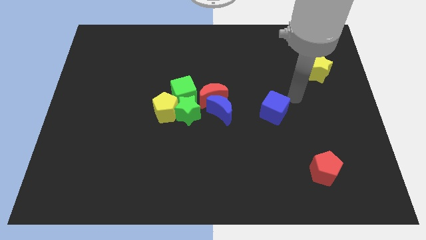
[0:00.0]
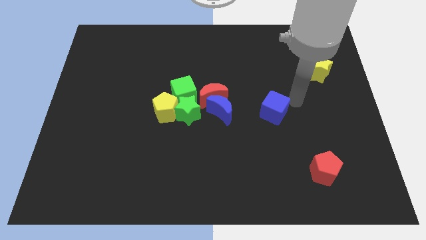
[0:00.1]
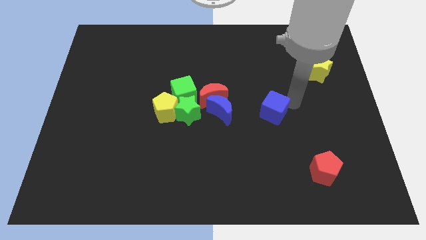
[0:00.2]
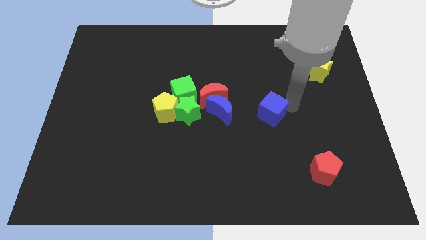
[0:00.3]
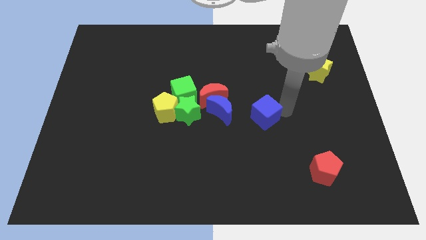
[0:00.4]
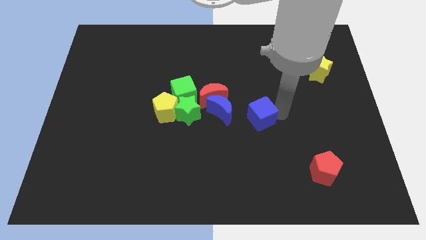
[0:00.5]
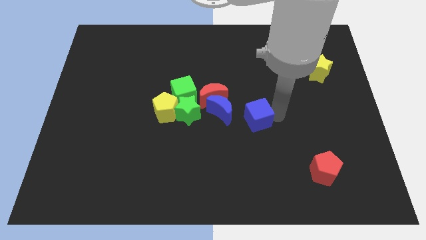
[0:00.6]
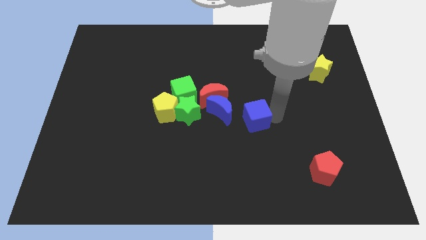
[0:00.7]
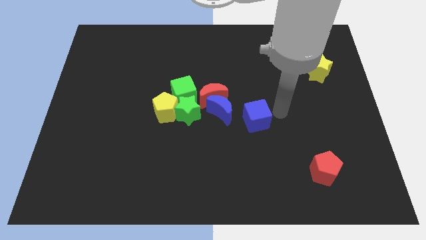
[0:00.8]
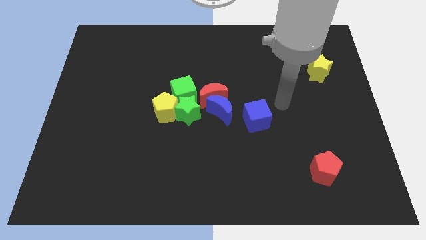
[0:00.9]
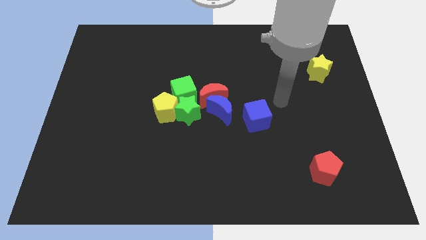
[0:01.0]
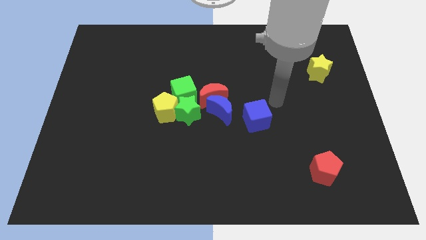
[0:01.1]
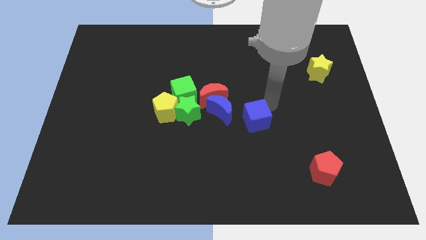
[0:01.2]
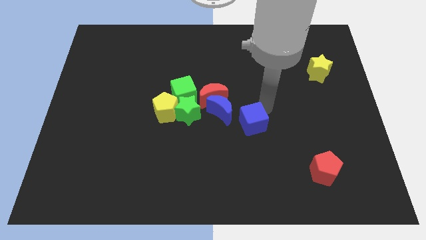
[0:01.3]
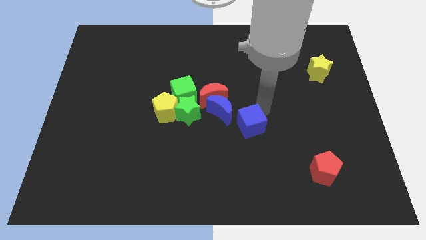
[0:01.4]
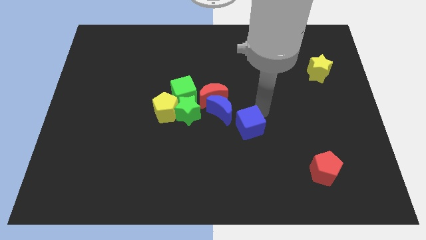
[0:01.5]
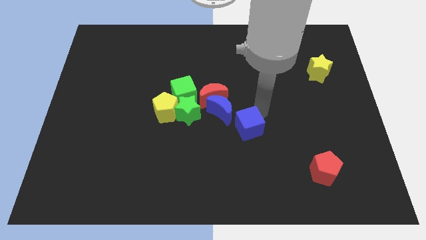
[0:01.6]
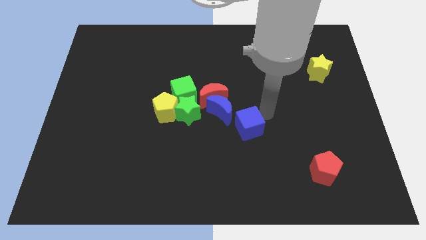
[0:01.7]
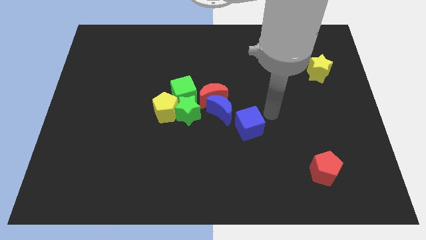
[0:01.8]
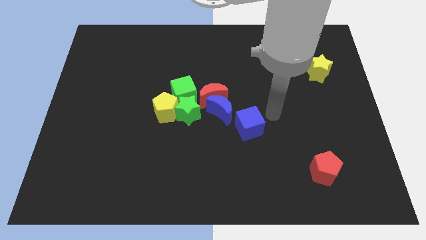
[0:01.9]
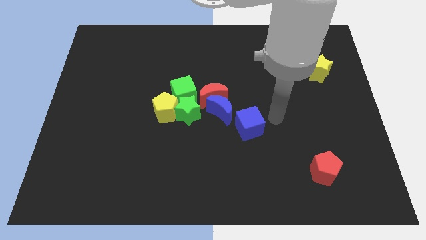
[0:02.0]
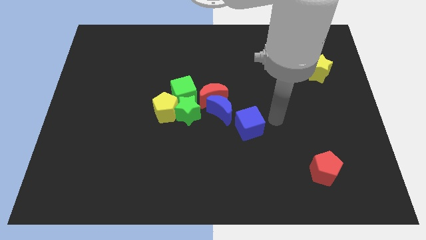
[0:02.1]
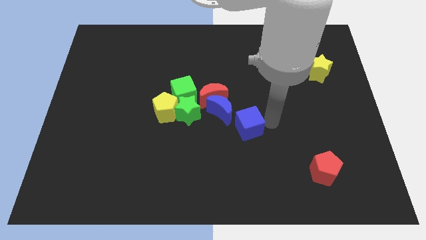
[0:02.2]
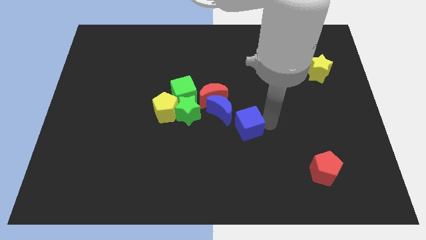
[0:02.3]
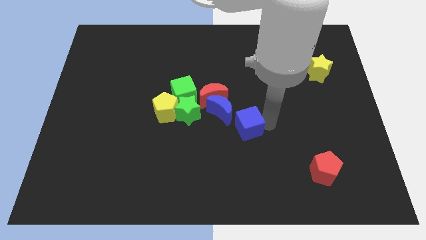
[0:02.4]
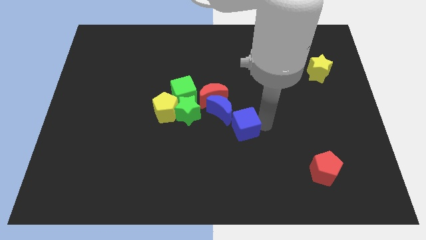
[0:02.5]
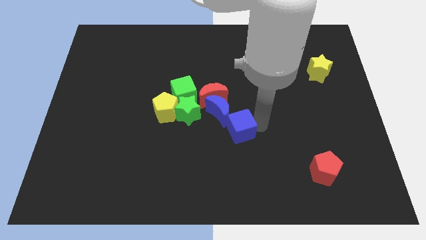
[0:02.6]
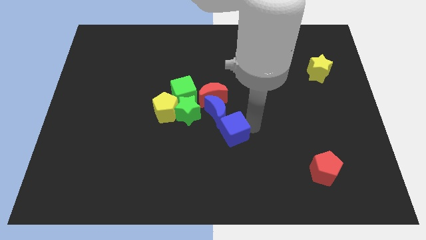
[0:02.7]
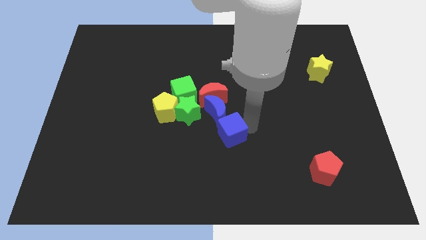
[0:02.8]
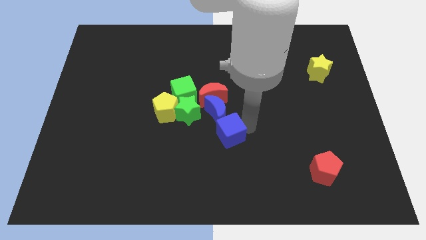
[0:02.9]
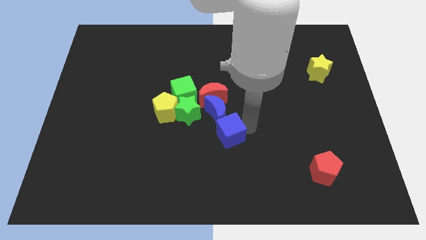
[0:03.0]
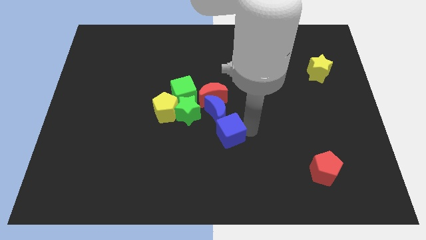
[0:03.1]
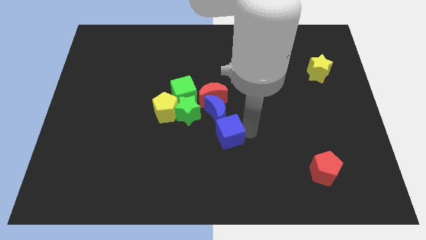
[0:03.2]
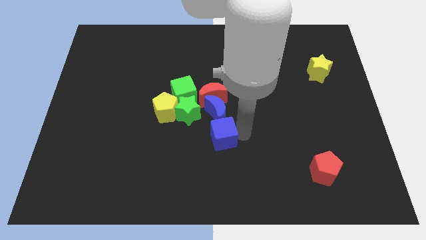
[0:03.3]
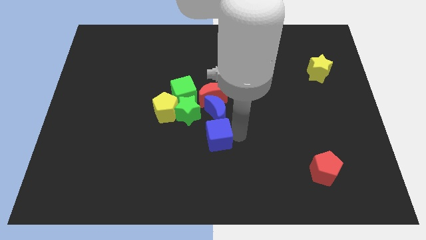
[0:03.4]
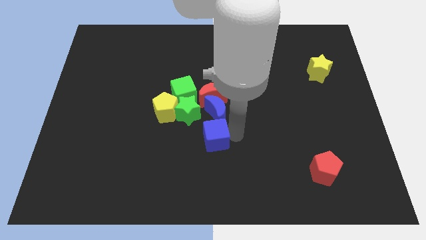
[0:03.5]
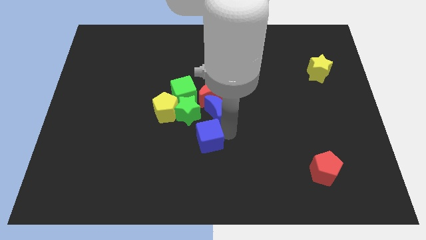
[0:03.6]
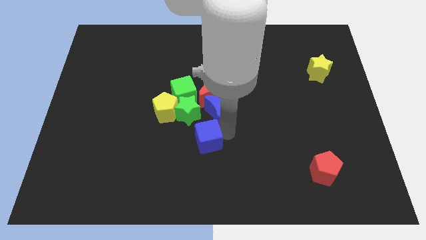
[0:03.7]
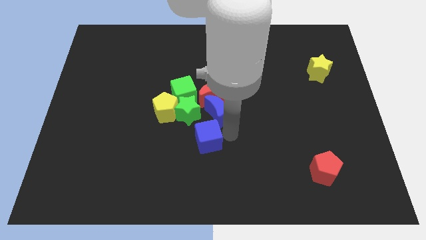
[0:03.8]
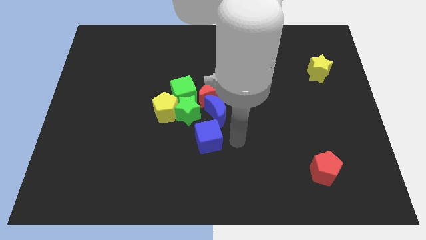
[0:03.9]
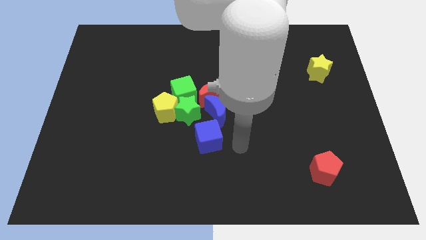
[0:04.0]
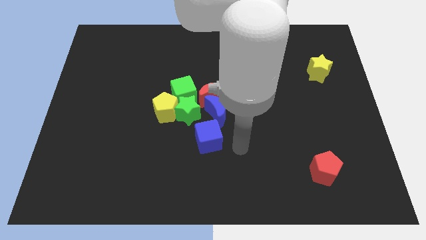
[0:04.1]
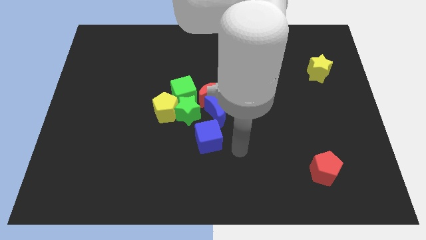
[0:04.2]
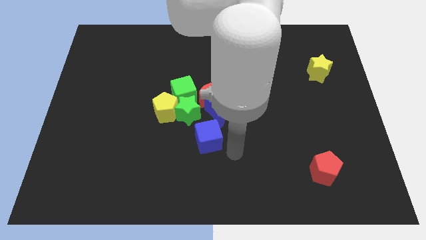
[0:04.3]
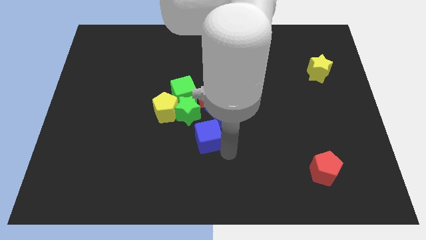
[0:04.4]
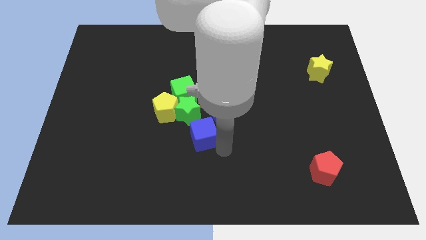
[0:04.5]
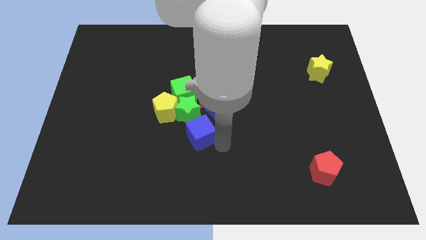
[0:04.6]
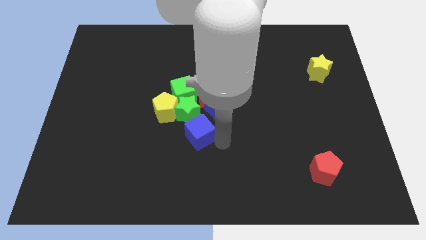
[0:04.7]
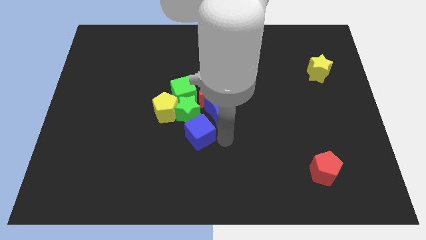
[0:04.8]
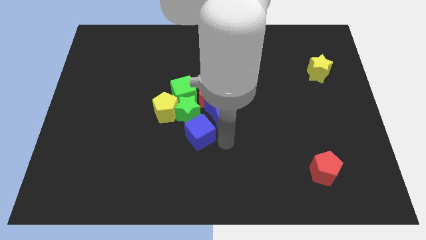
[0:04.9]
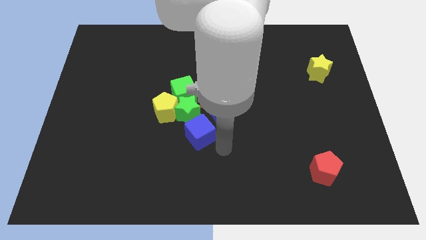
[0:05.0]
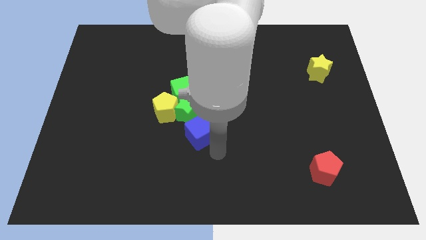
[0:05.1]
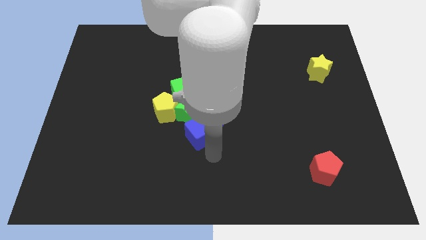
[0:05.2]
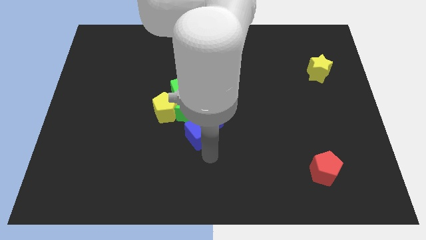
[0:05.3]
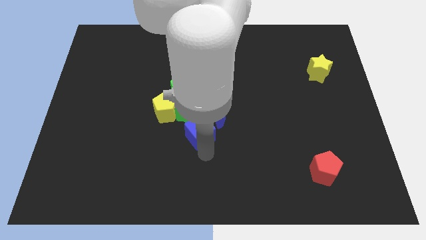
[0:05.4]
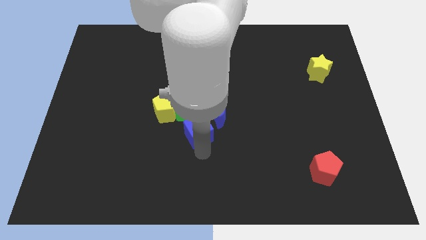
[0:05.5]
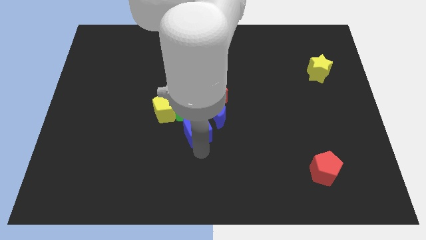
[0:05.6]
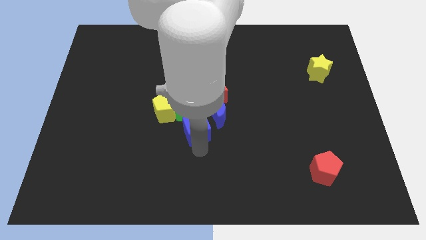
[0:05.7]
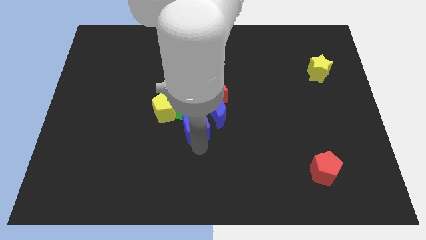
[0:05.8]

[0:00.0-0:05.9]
place the blue cube below the blue crescent

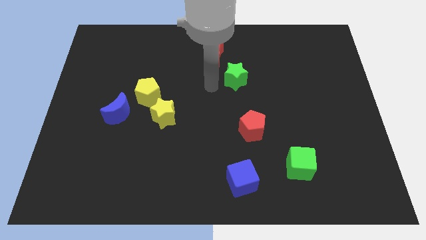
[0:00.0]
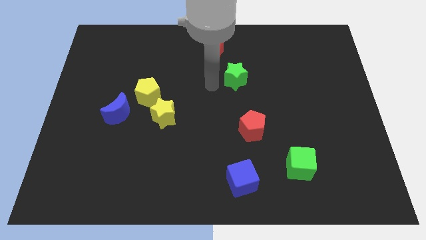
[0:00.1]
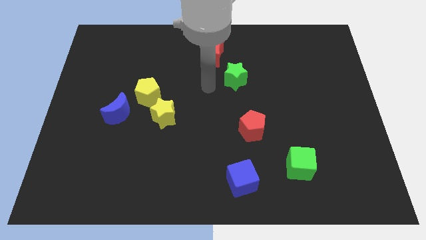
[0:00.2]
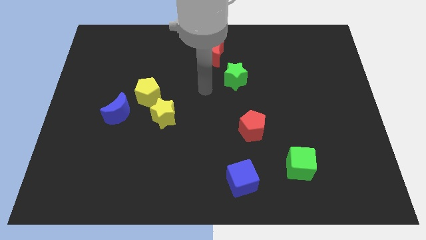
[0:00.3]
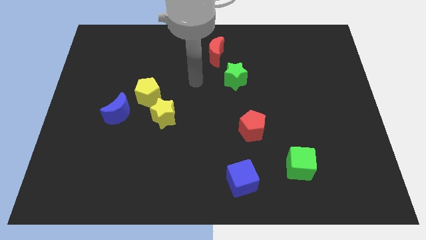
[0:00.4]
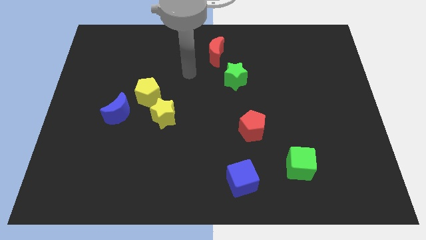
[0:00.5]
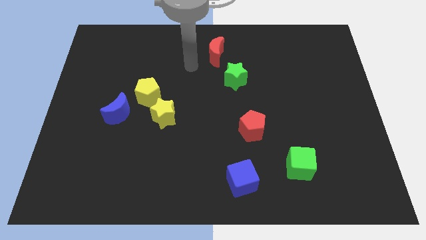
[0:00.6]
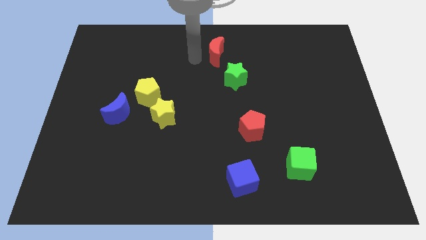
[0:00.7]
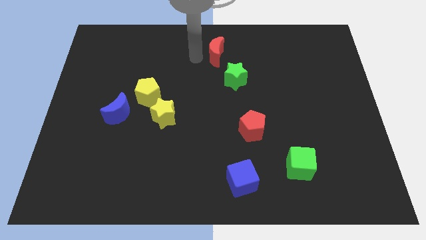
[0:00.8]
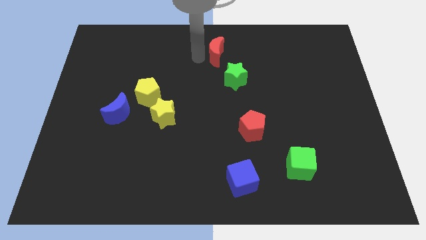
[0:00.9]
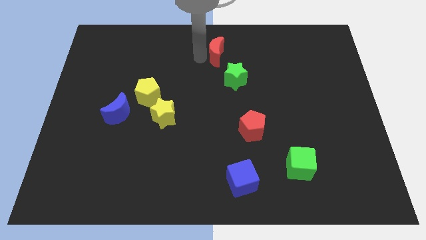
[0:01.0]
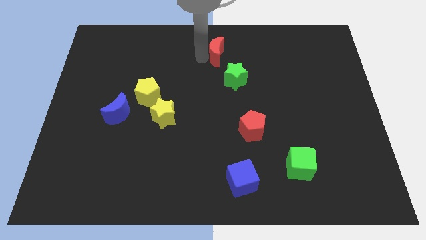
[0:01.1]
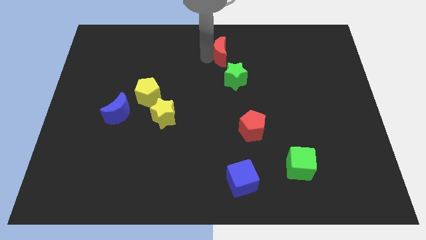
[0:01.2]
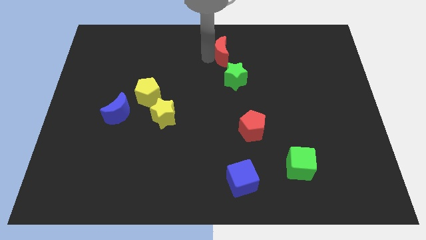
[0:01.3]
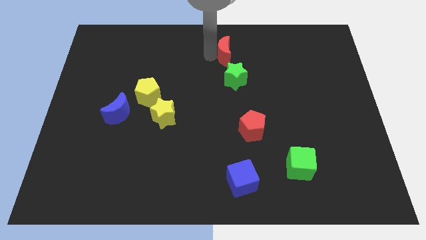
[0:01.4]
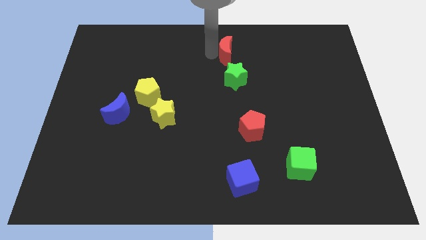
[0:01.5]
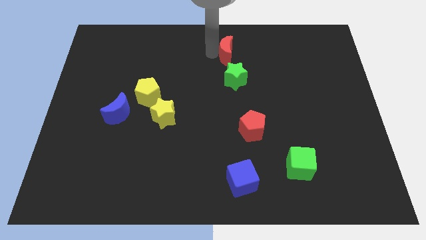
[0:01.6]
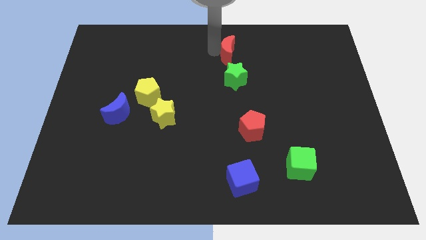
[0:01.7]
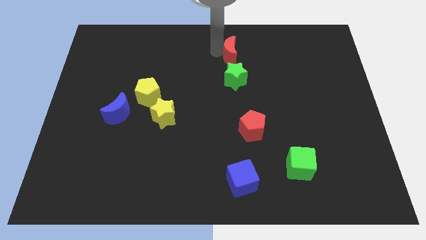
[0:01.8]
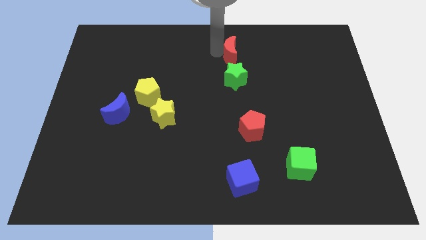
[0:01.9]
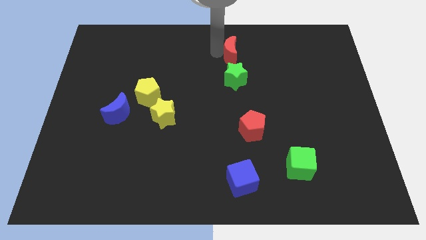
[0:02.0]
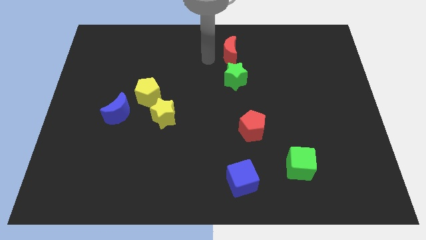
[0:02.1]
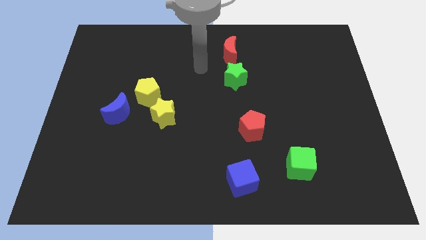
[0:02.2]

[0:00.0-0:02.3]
move the red crescent to the top of the green star

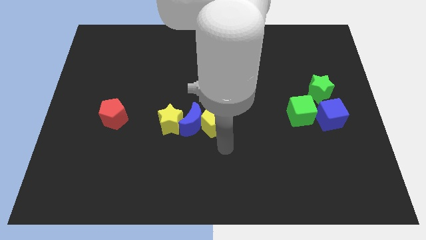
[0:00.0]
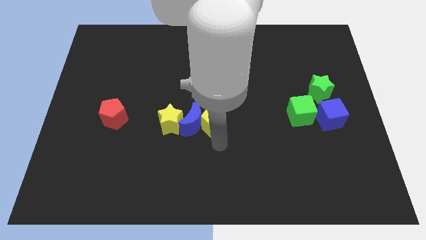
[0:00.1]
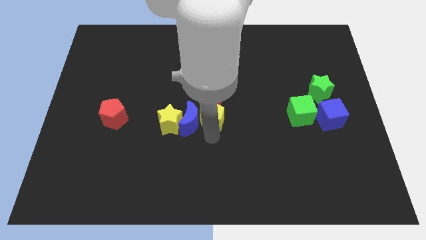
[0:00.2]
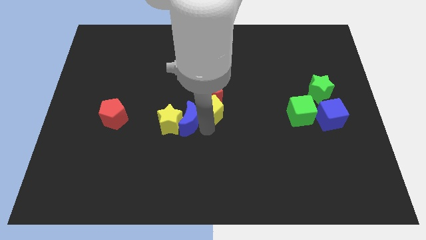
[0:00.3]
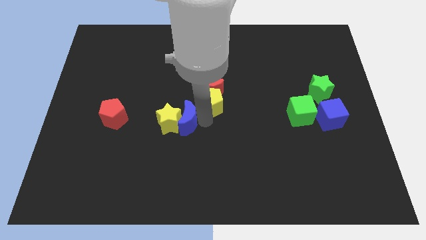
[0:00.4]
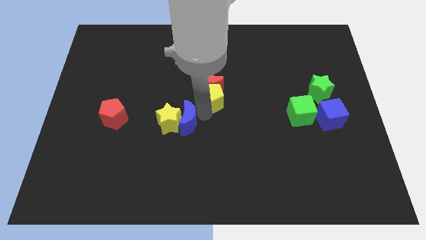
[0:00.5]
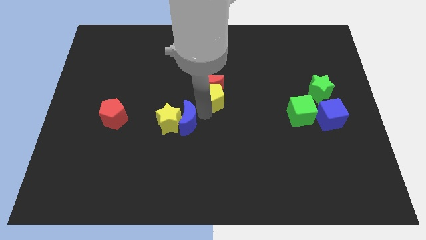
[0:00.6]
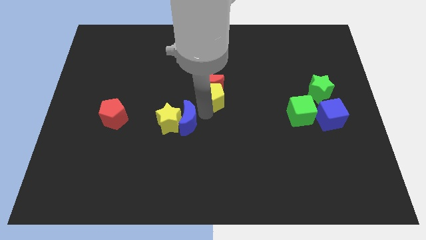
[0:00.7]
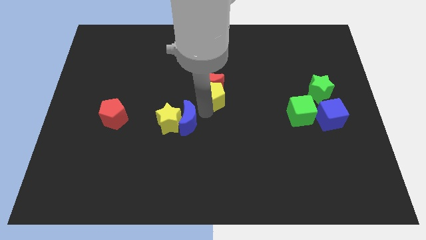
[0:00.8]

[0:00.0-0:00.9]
push the yellow pentagon into red crescent
